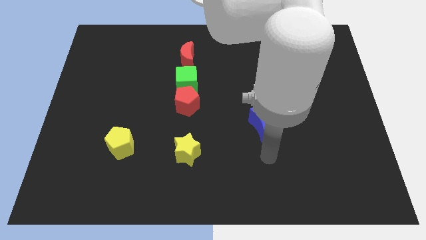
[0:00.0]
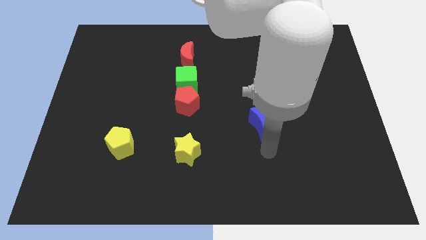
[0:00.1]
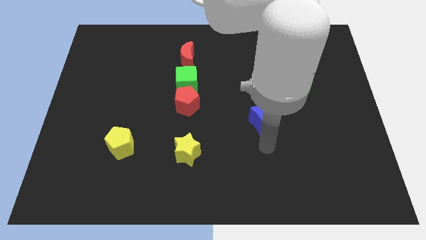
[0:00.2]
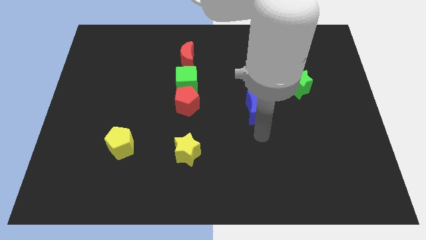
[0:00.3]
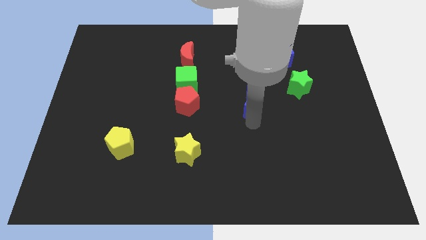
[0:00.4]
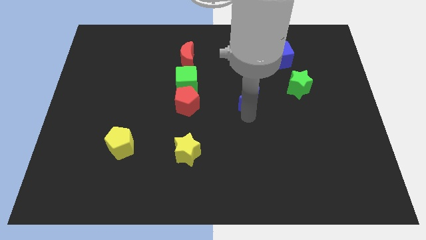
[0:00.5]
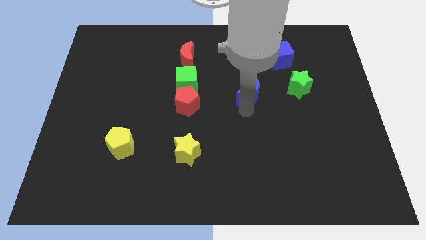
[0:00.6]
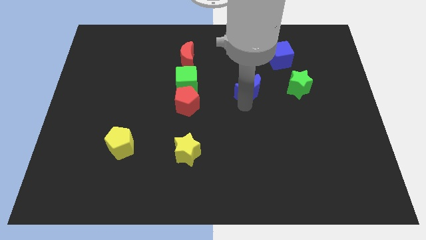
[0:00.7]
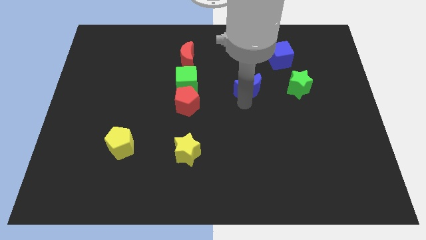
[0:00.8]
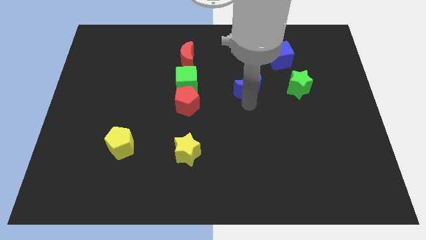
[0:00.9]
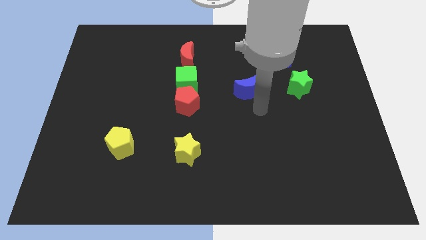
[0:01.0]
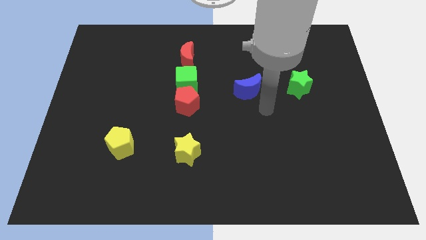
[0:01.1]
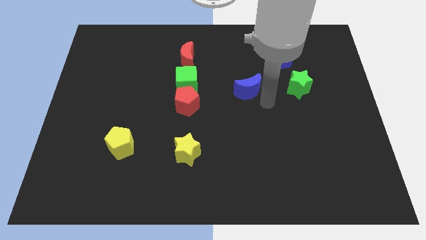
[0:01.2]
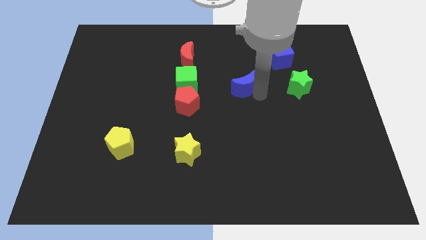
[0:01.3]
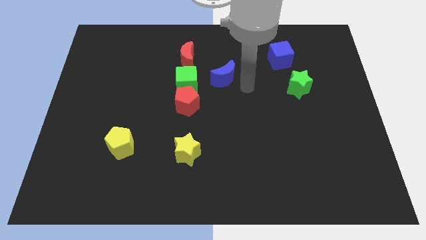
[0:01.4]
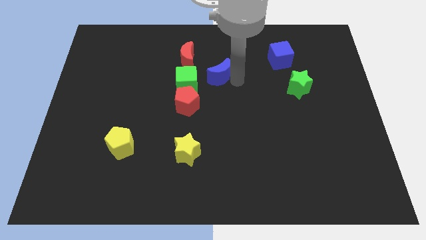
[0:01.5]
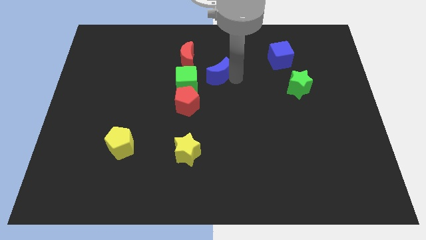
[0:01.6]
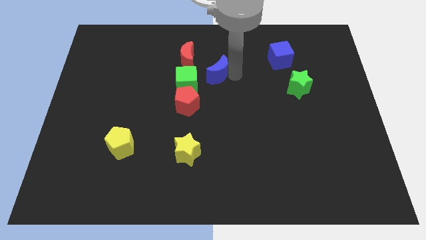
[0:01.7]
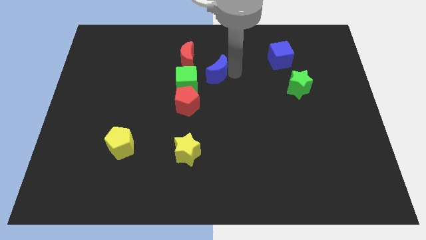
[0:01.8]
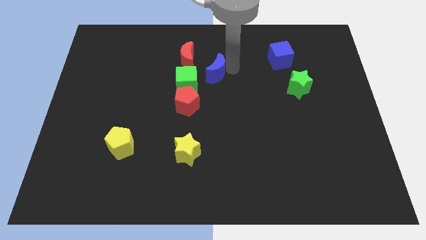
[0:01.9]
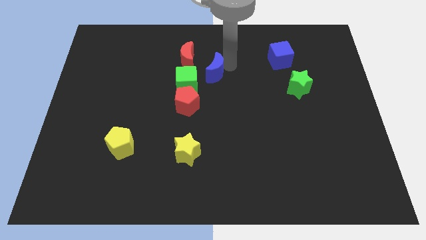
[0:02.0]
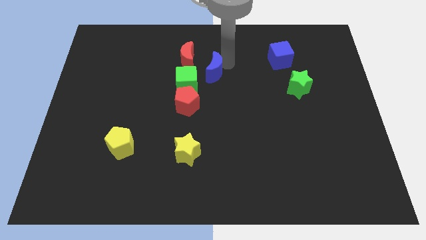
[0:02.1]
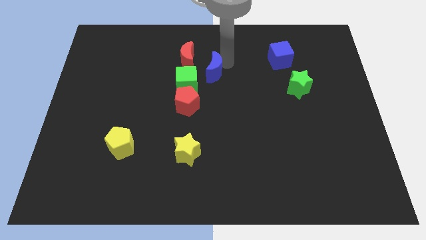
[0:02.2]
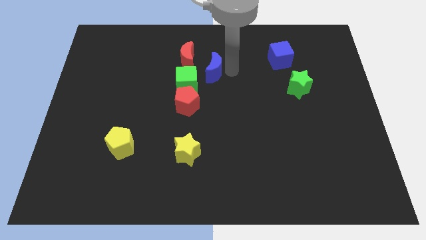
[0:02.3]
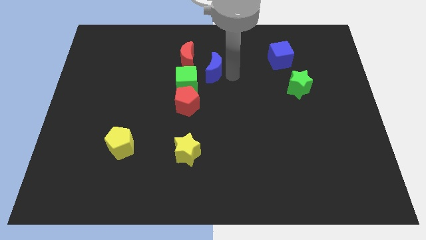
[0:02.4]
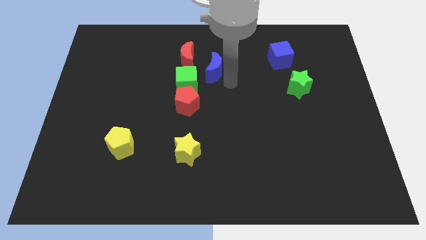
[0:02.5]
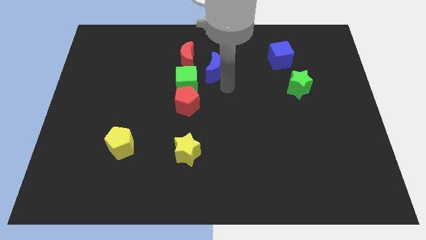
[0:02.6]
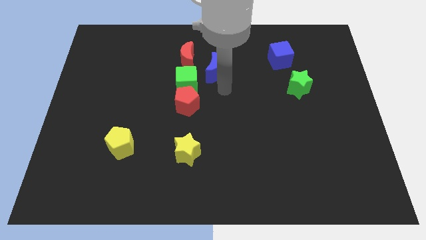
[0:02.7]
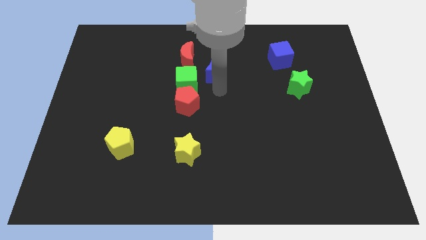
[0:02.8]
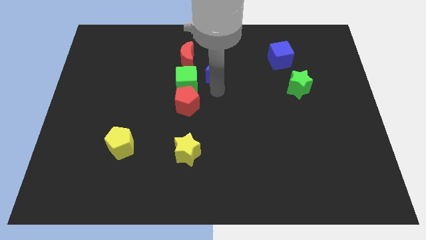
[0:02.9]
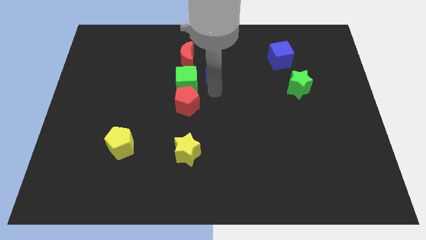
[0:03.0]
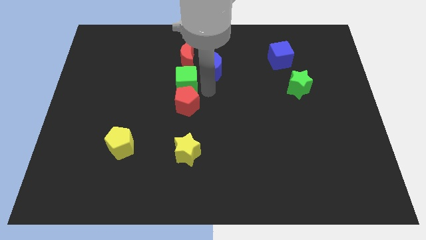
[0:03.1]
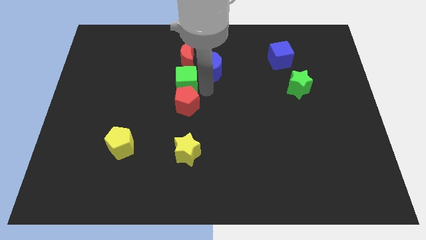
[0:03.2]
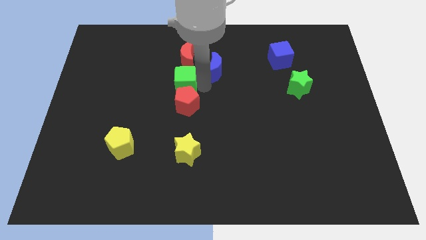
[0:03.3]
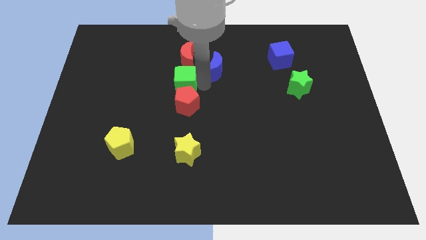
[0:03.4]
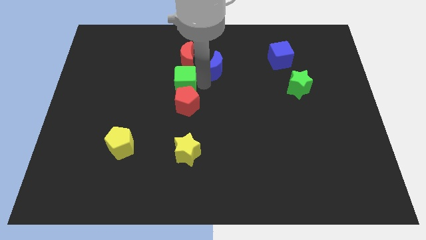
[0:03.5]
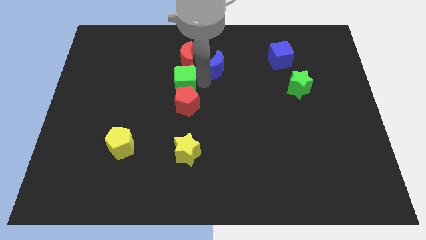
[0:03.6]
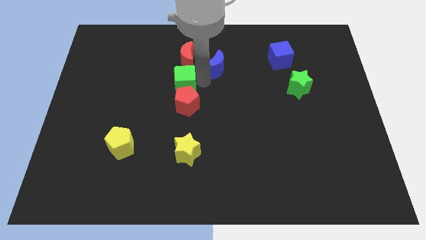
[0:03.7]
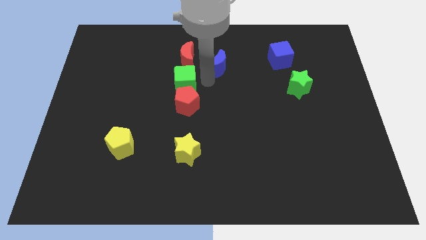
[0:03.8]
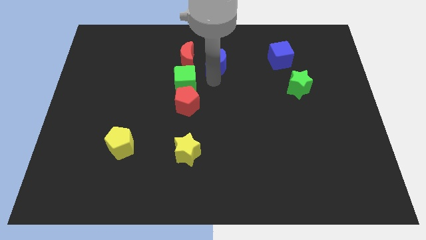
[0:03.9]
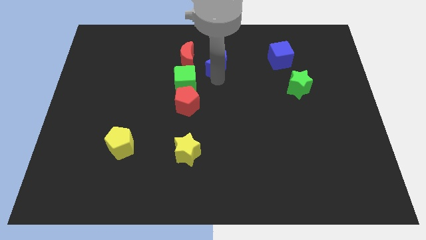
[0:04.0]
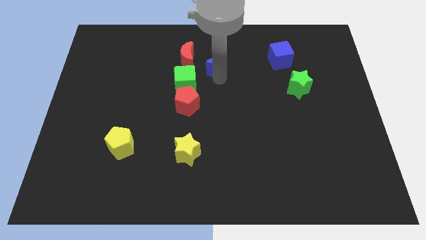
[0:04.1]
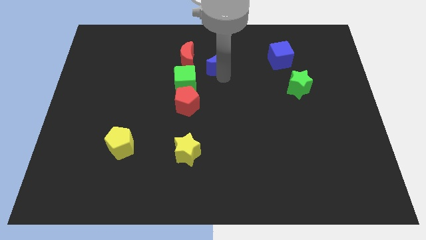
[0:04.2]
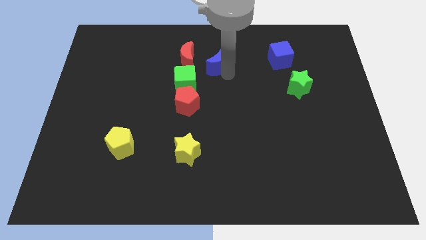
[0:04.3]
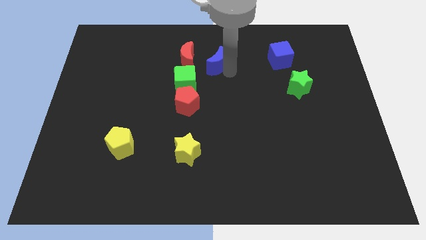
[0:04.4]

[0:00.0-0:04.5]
push the blue crescent near the top center of the board

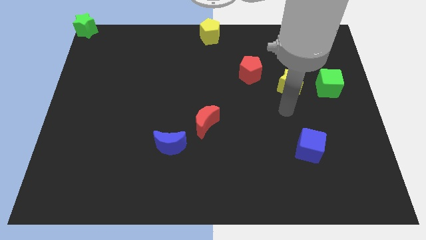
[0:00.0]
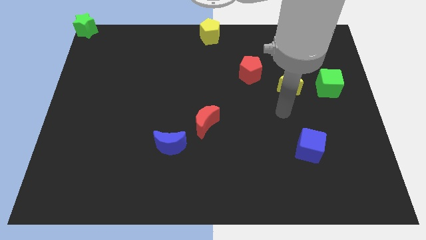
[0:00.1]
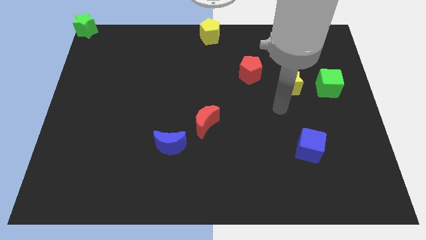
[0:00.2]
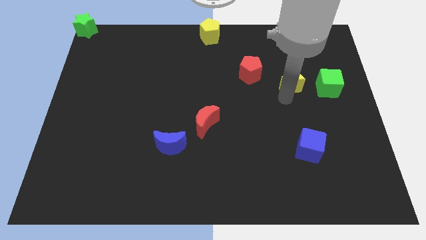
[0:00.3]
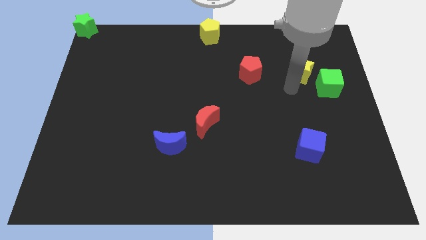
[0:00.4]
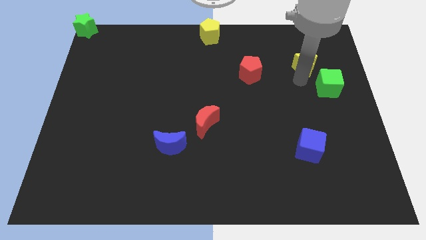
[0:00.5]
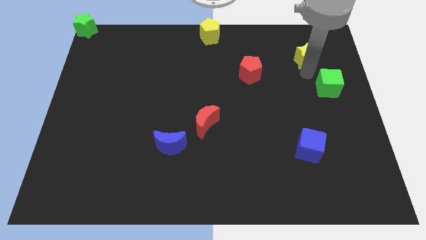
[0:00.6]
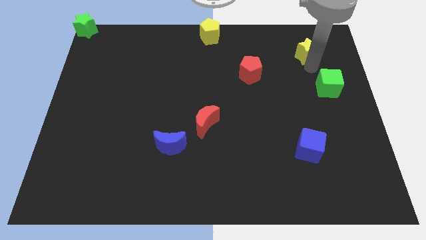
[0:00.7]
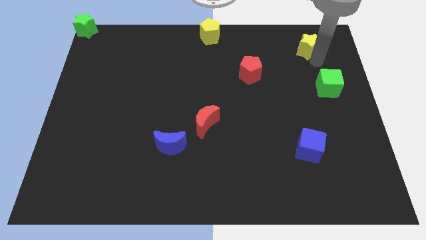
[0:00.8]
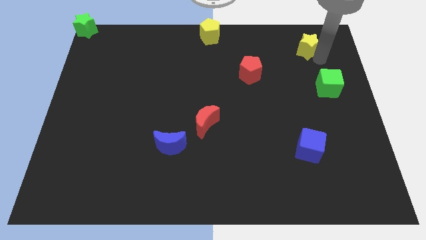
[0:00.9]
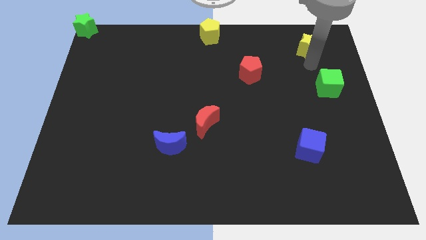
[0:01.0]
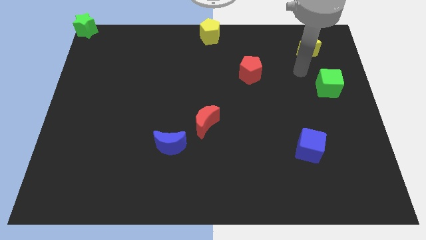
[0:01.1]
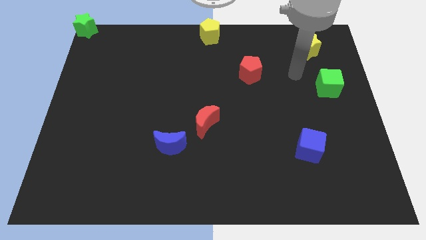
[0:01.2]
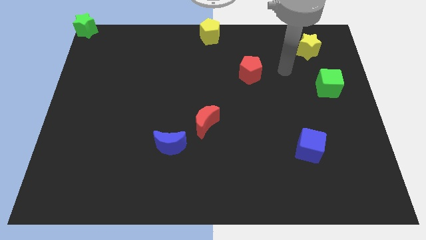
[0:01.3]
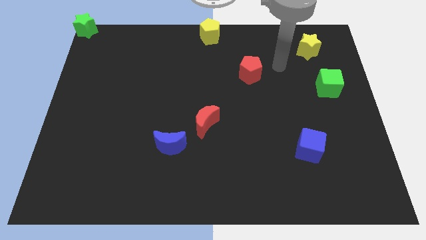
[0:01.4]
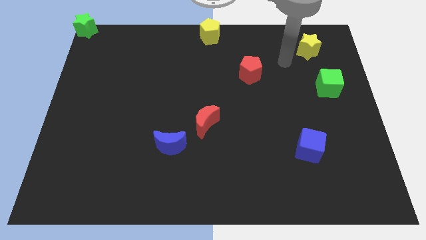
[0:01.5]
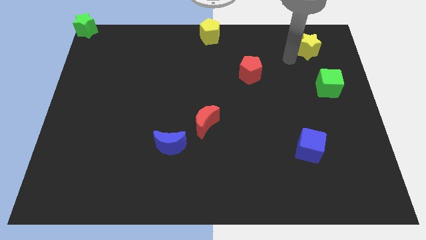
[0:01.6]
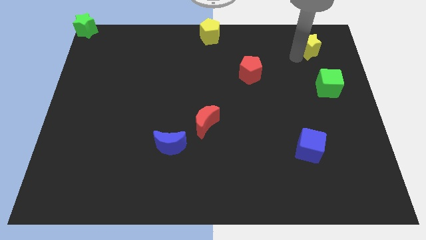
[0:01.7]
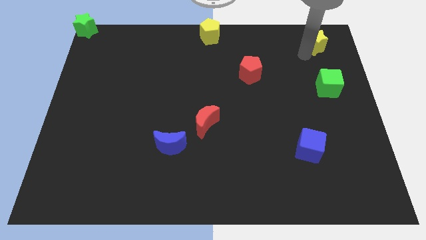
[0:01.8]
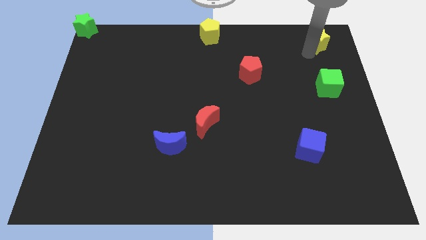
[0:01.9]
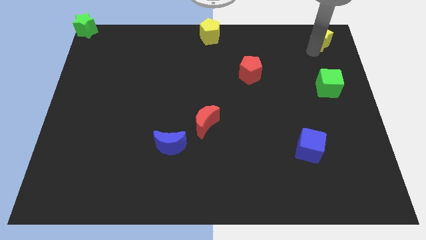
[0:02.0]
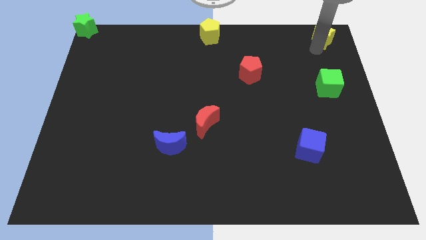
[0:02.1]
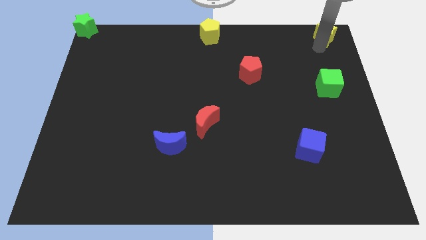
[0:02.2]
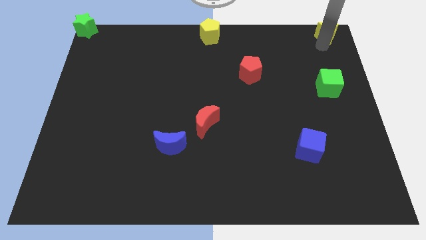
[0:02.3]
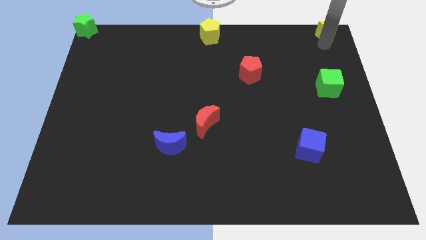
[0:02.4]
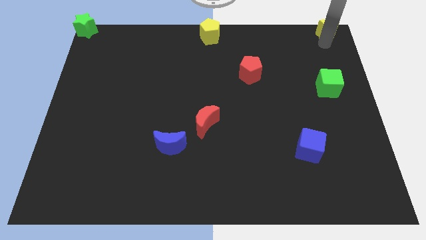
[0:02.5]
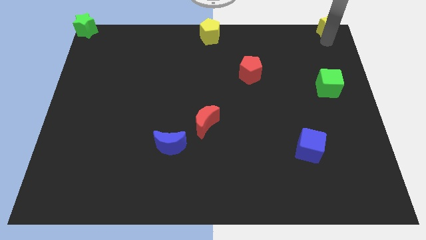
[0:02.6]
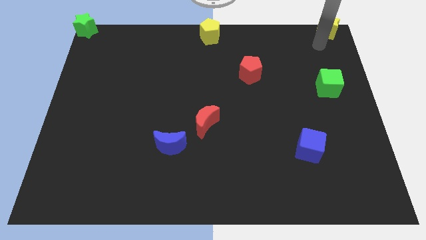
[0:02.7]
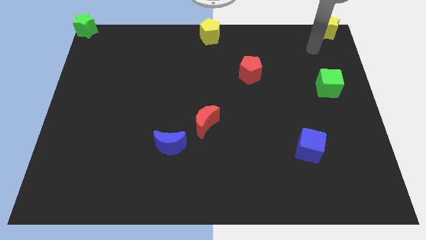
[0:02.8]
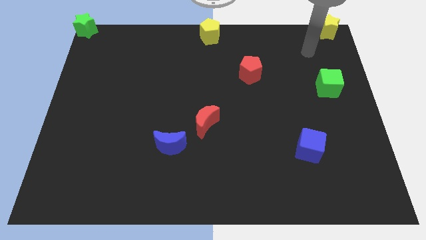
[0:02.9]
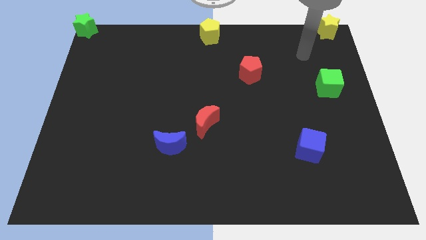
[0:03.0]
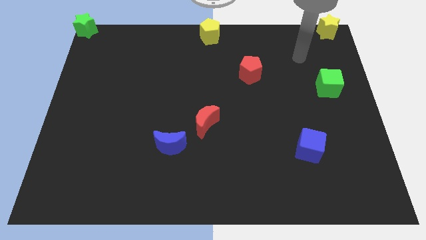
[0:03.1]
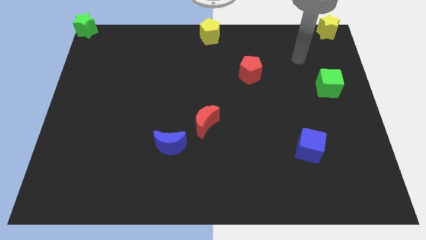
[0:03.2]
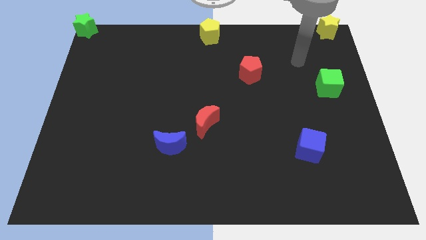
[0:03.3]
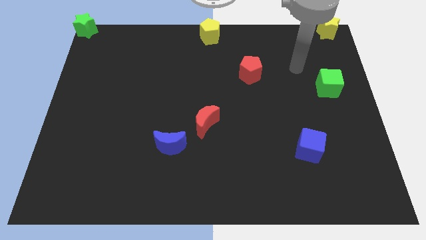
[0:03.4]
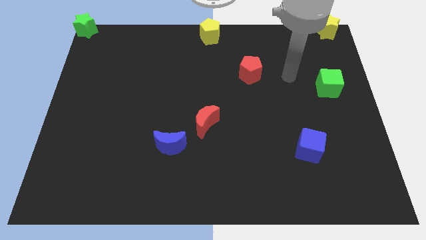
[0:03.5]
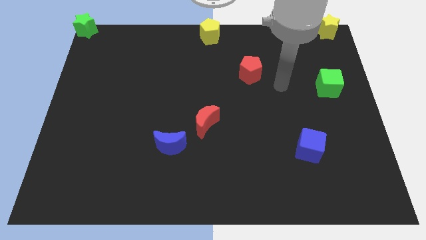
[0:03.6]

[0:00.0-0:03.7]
place the yellow star on the top right of the board

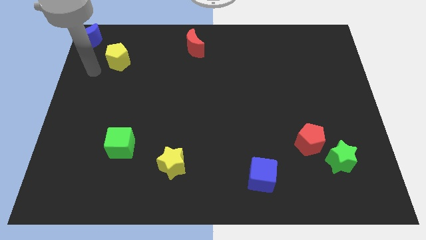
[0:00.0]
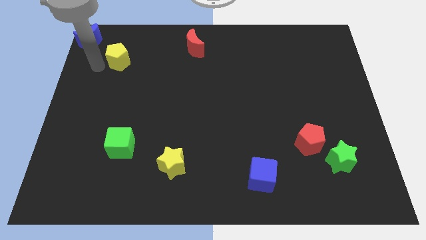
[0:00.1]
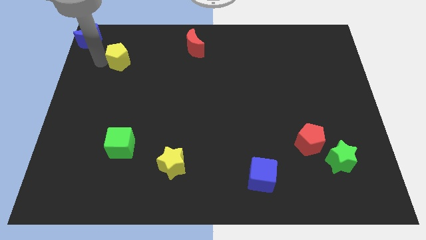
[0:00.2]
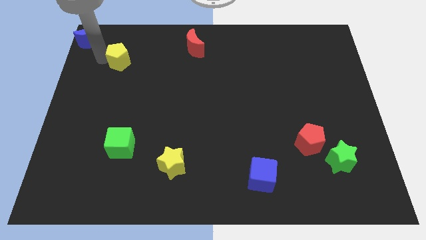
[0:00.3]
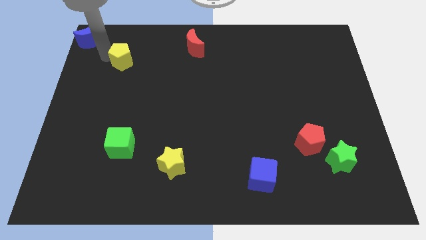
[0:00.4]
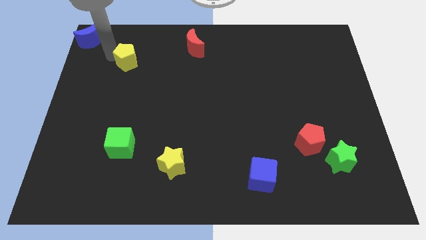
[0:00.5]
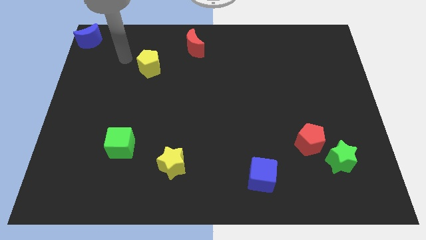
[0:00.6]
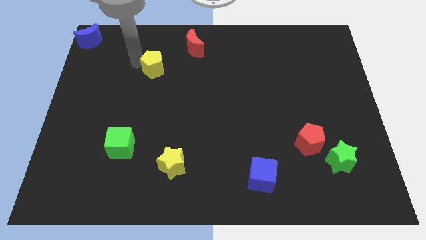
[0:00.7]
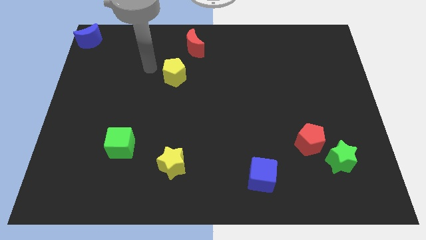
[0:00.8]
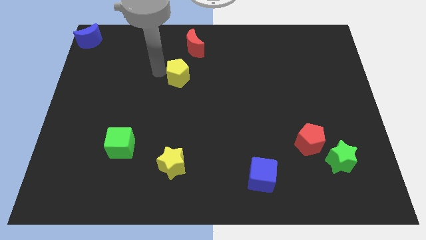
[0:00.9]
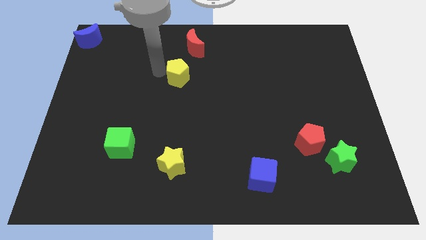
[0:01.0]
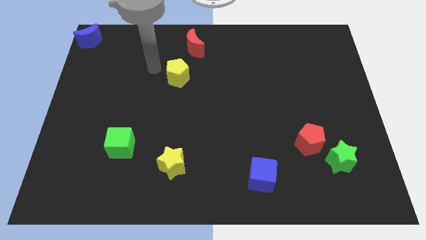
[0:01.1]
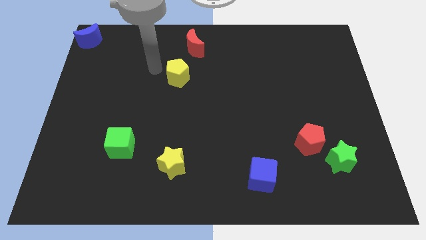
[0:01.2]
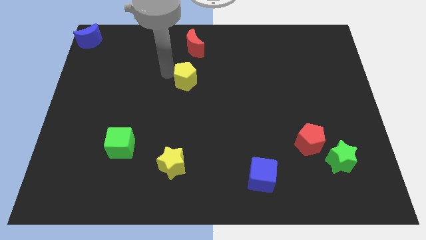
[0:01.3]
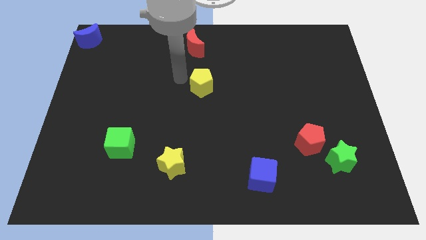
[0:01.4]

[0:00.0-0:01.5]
place the yellow pentagon below the red moon
